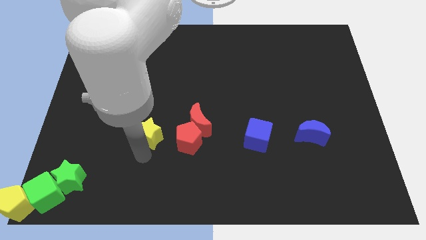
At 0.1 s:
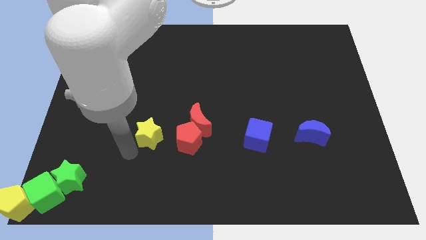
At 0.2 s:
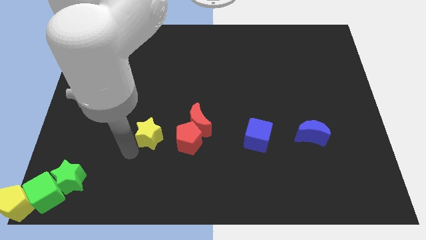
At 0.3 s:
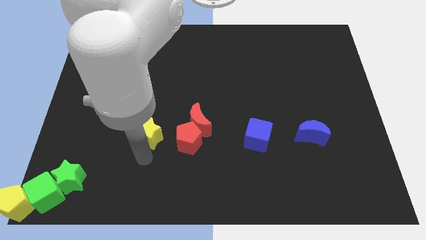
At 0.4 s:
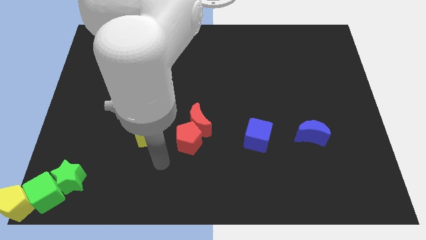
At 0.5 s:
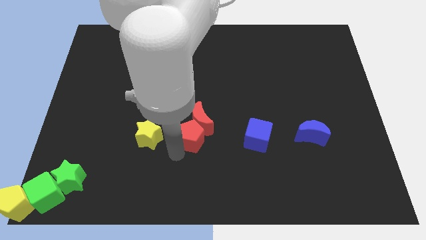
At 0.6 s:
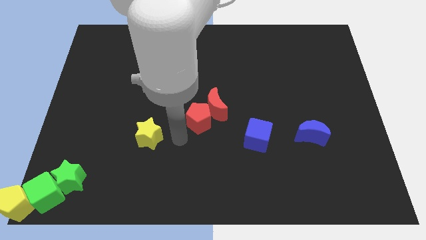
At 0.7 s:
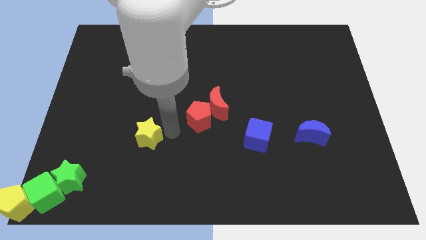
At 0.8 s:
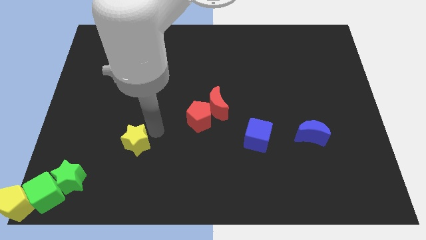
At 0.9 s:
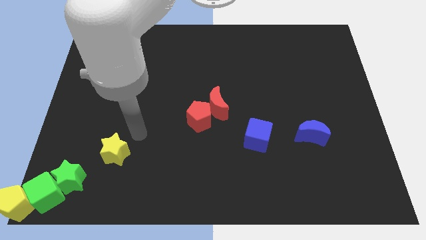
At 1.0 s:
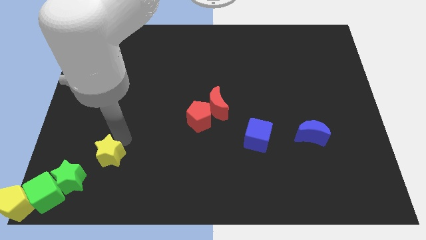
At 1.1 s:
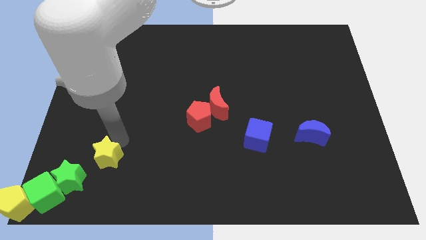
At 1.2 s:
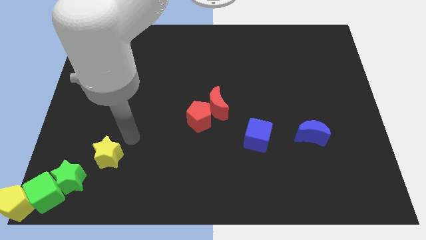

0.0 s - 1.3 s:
place yellow star top right to the green star

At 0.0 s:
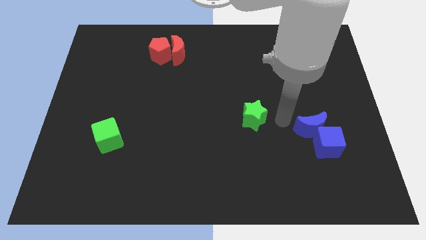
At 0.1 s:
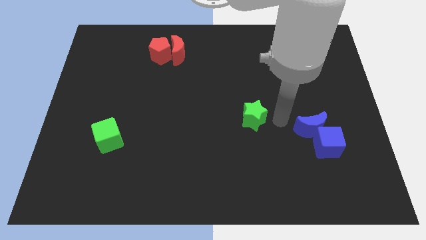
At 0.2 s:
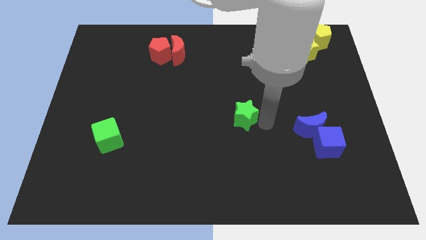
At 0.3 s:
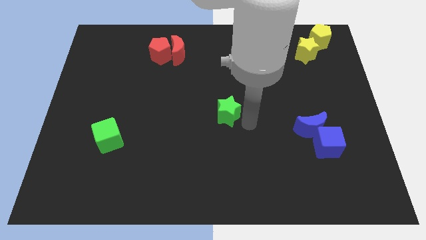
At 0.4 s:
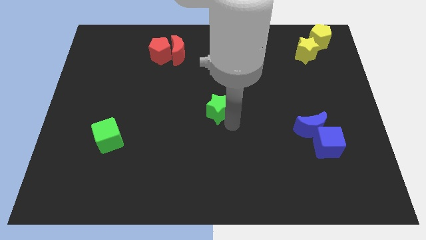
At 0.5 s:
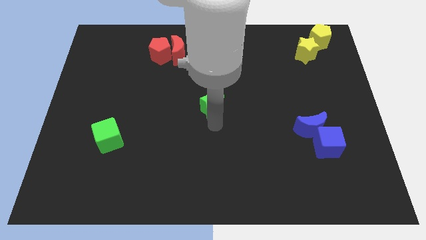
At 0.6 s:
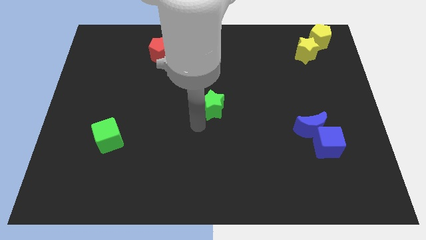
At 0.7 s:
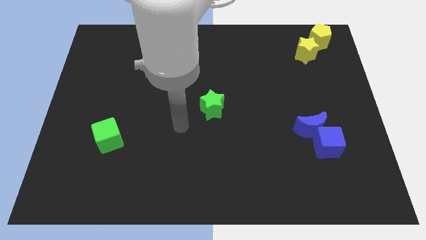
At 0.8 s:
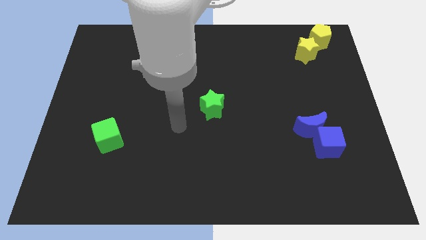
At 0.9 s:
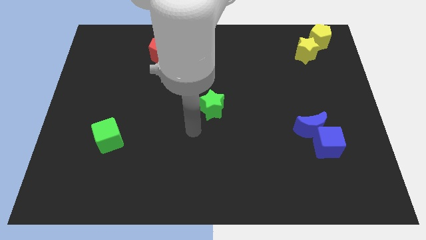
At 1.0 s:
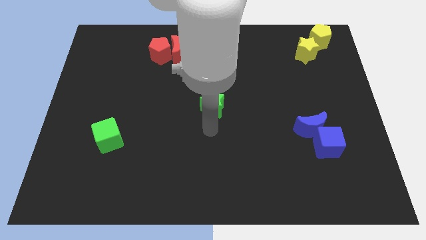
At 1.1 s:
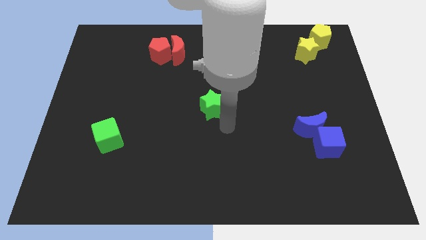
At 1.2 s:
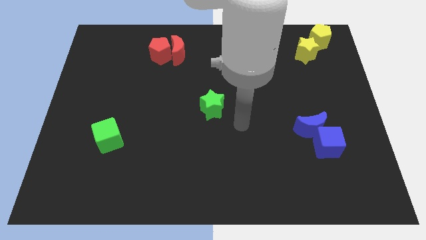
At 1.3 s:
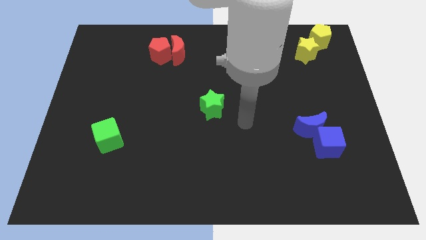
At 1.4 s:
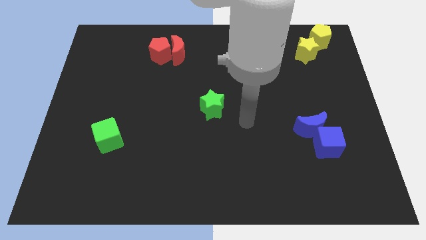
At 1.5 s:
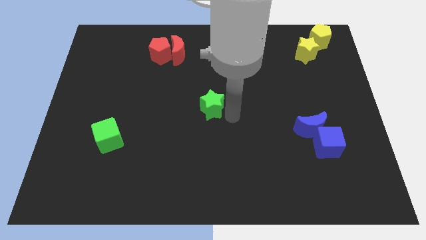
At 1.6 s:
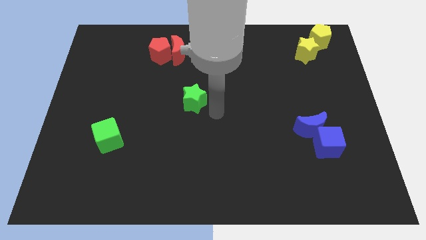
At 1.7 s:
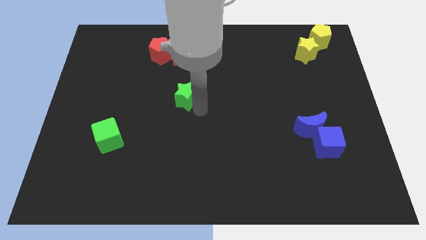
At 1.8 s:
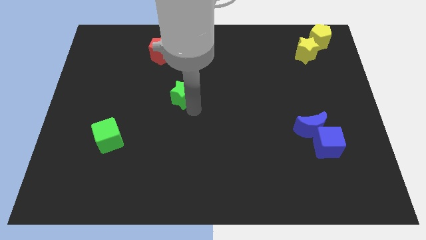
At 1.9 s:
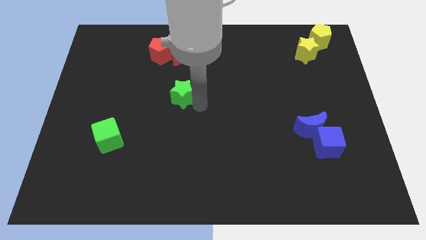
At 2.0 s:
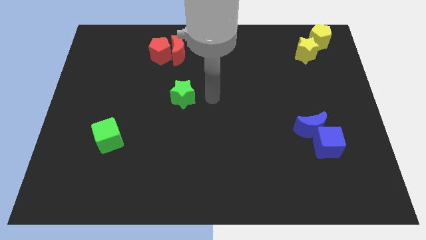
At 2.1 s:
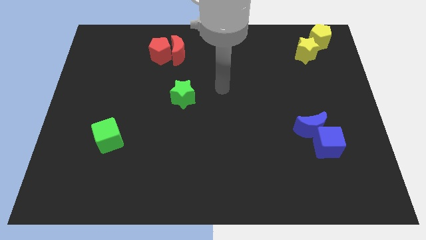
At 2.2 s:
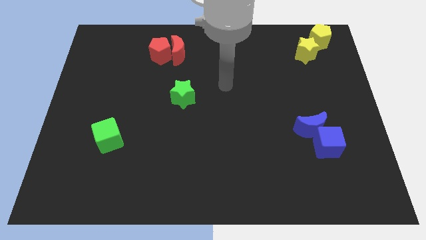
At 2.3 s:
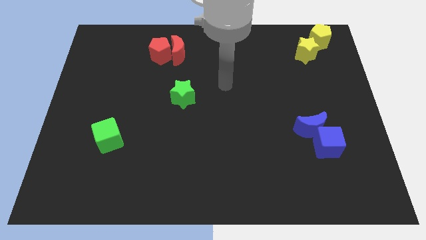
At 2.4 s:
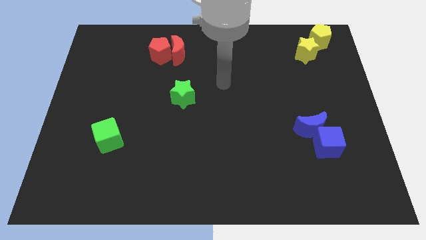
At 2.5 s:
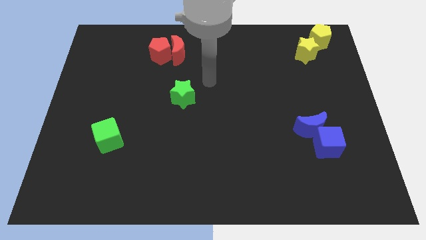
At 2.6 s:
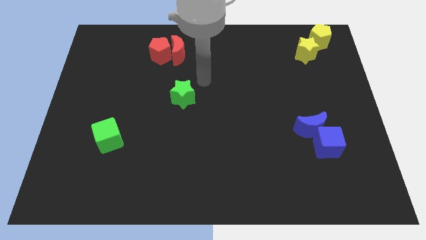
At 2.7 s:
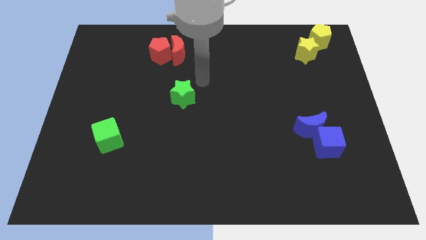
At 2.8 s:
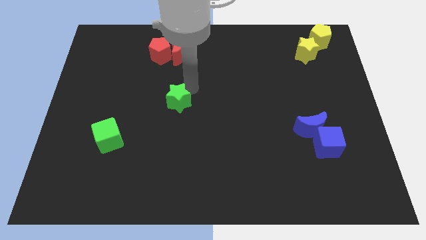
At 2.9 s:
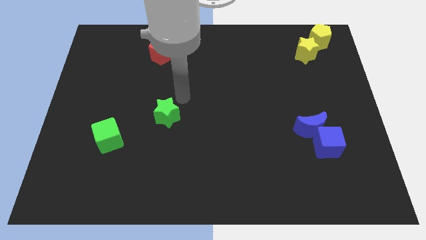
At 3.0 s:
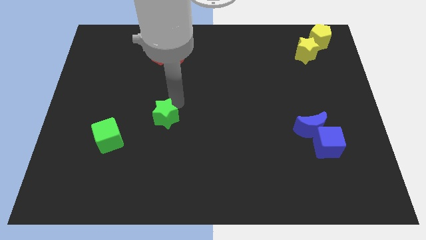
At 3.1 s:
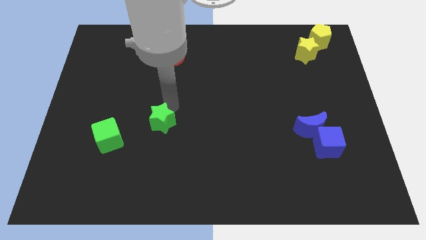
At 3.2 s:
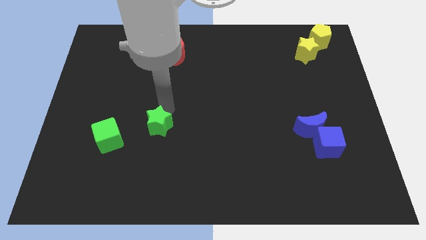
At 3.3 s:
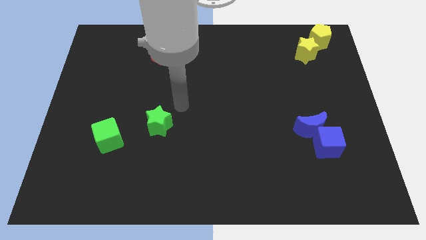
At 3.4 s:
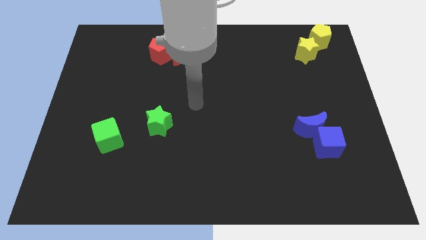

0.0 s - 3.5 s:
move the green star to the right of the green cube

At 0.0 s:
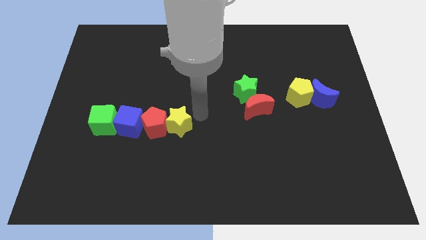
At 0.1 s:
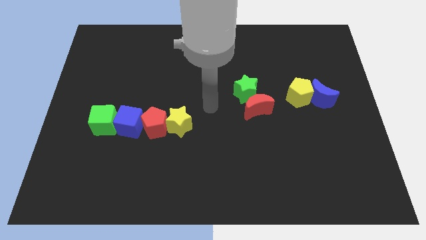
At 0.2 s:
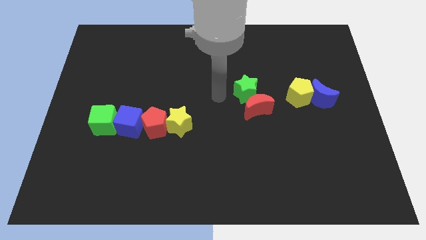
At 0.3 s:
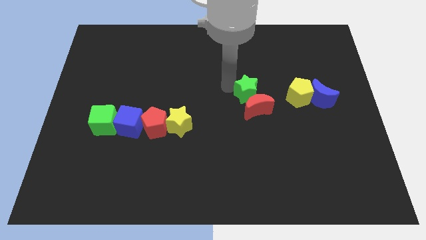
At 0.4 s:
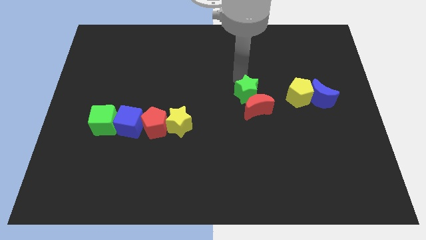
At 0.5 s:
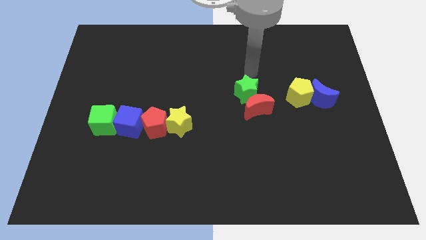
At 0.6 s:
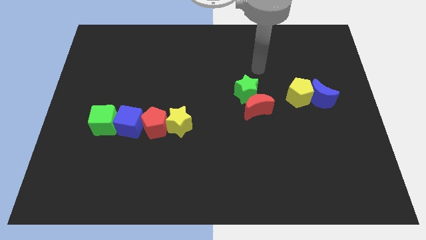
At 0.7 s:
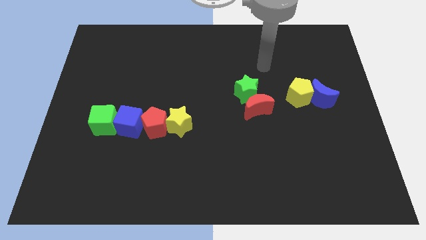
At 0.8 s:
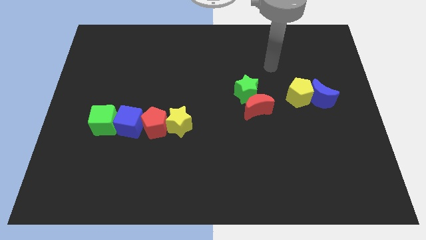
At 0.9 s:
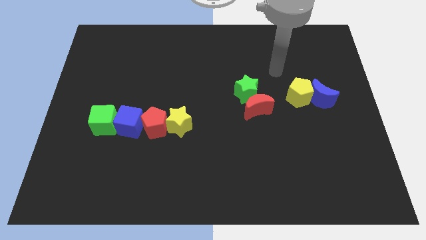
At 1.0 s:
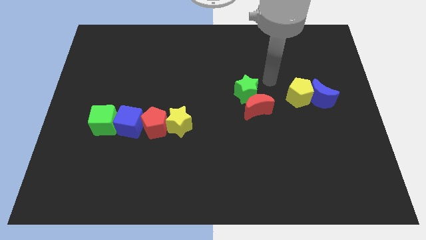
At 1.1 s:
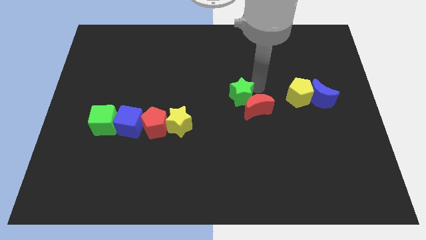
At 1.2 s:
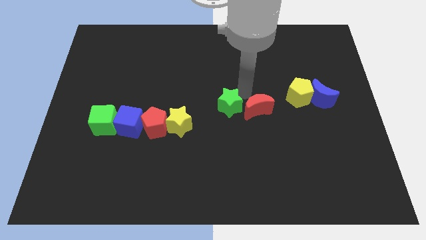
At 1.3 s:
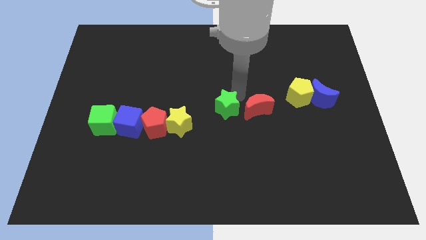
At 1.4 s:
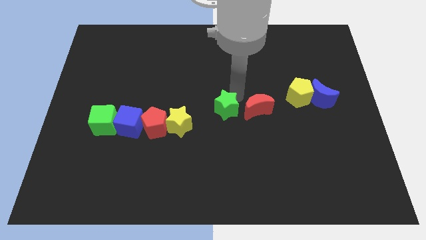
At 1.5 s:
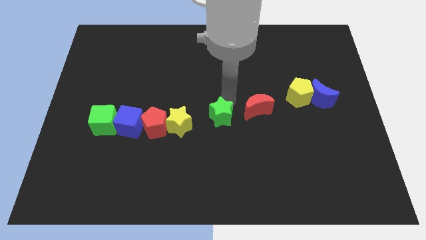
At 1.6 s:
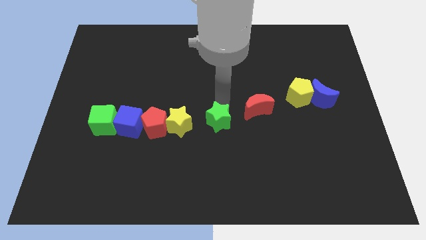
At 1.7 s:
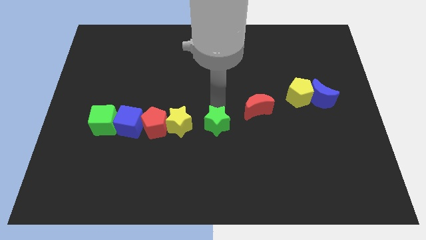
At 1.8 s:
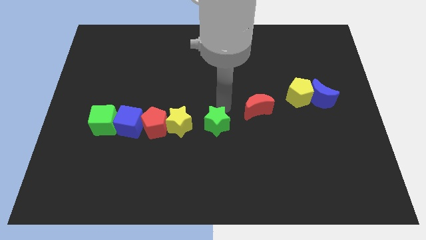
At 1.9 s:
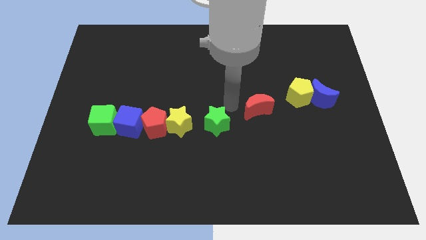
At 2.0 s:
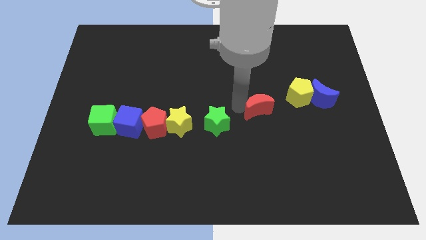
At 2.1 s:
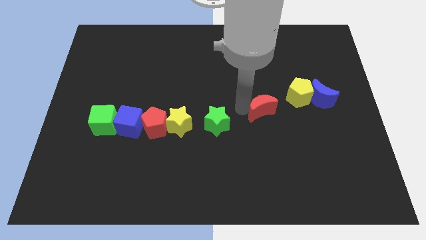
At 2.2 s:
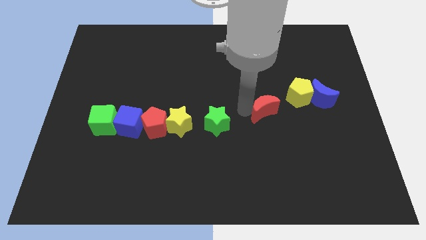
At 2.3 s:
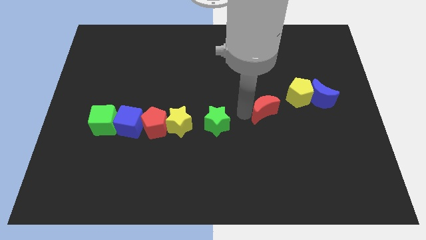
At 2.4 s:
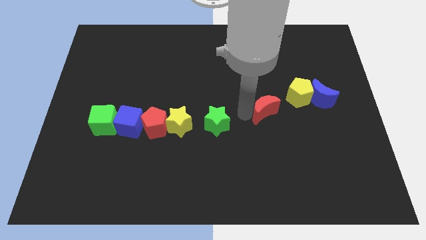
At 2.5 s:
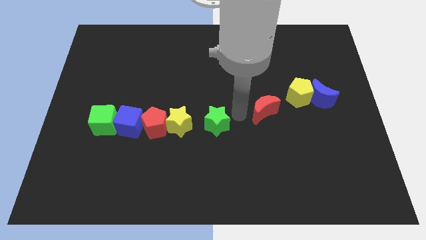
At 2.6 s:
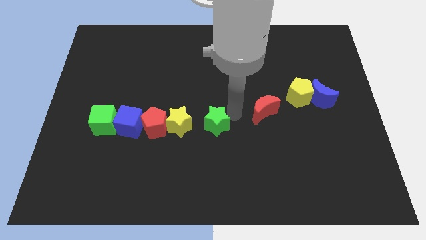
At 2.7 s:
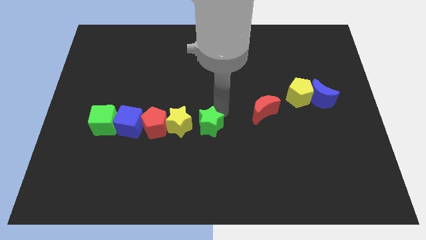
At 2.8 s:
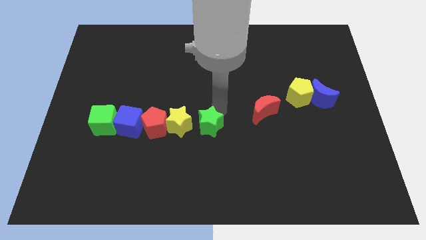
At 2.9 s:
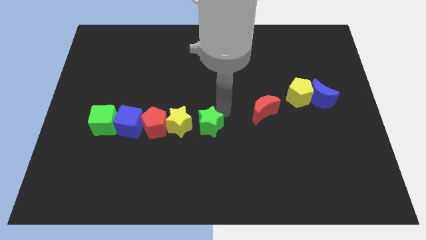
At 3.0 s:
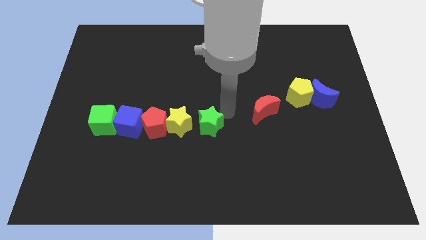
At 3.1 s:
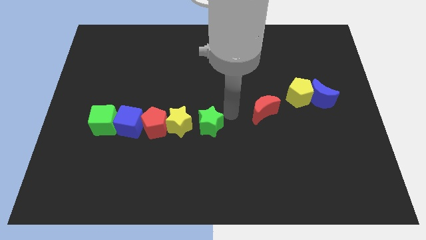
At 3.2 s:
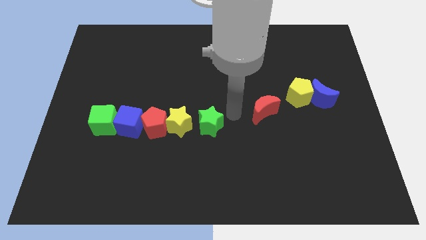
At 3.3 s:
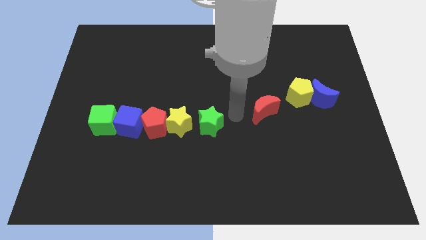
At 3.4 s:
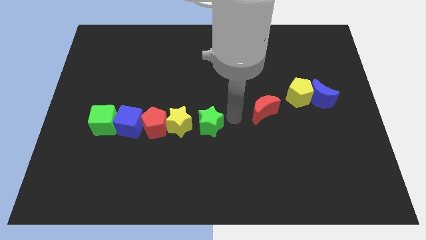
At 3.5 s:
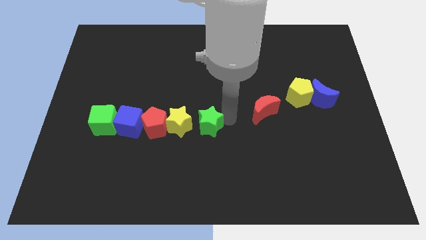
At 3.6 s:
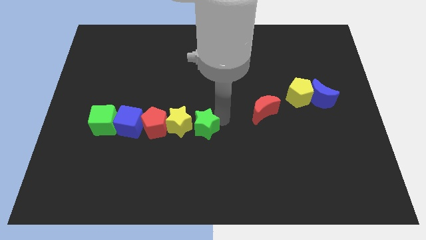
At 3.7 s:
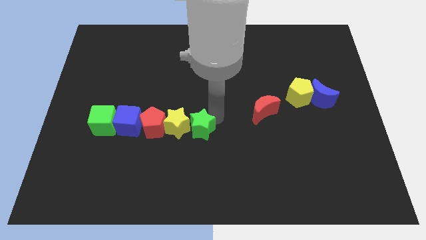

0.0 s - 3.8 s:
move the green star into the yellow star
